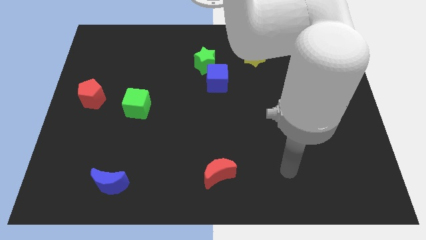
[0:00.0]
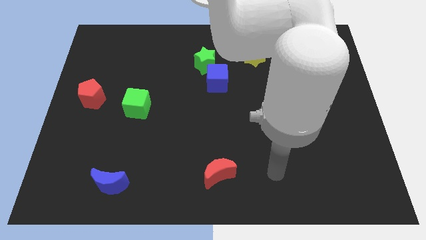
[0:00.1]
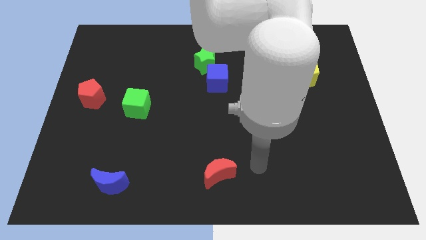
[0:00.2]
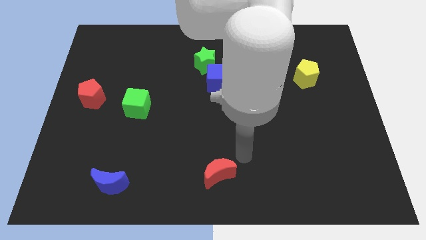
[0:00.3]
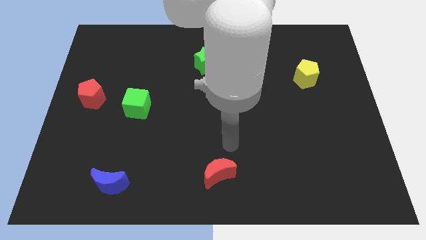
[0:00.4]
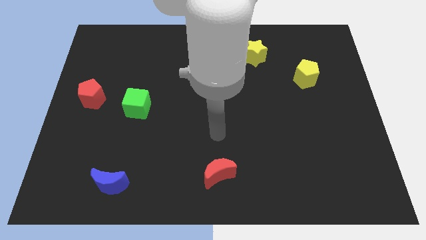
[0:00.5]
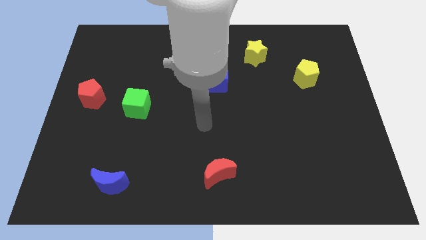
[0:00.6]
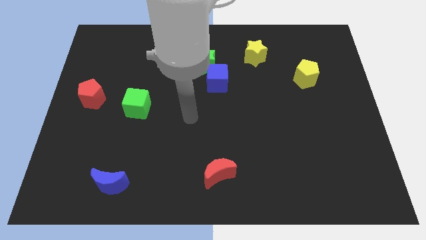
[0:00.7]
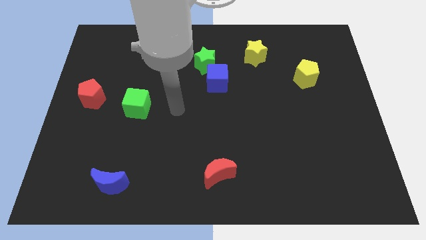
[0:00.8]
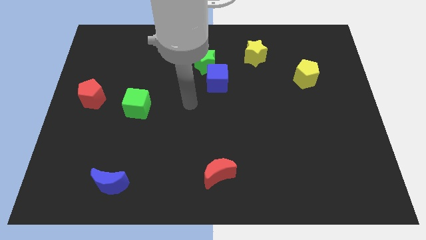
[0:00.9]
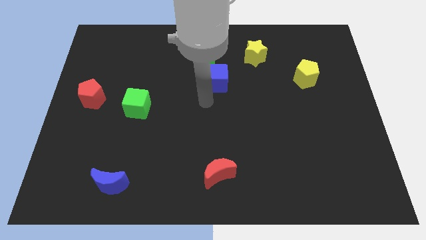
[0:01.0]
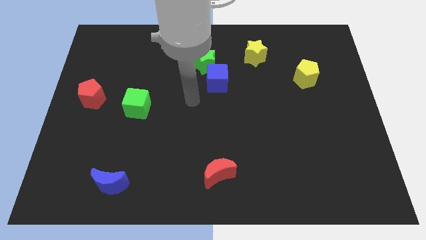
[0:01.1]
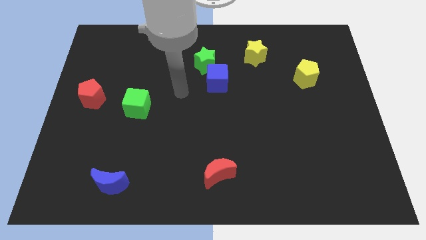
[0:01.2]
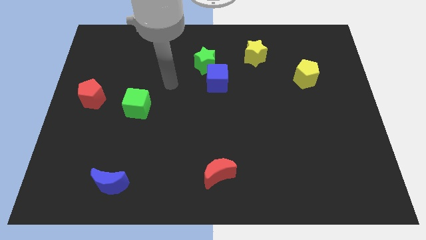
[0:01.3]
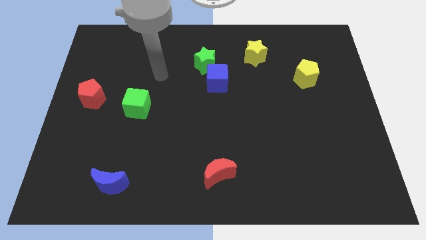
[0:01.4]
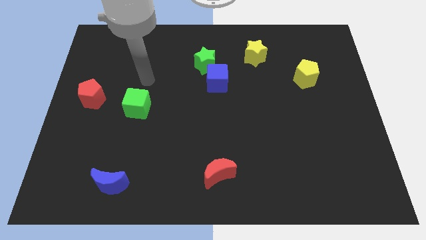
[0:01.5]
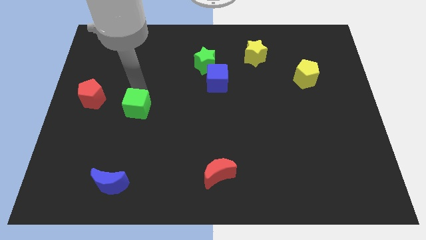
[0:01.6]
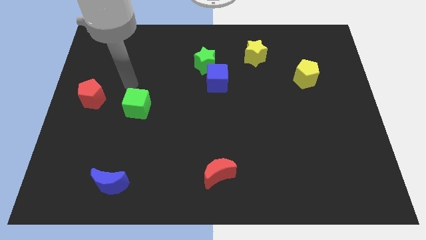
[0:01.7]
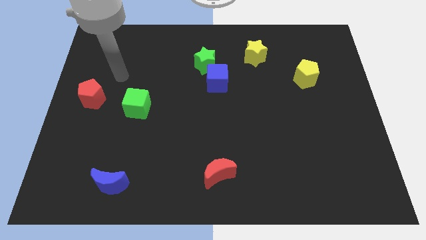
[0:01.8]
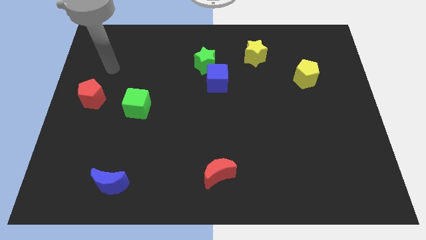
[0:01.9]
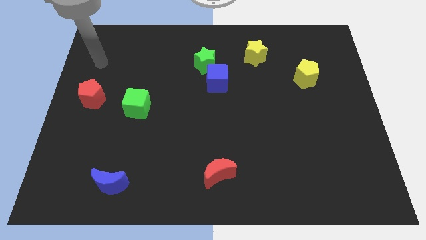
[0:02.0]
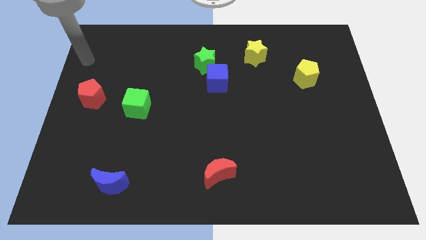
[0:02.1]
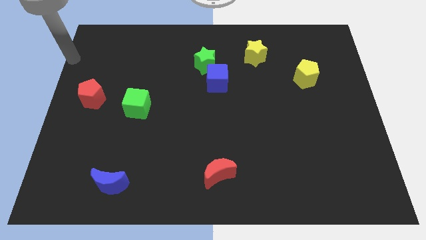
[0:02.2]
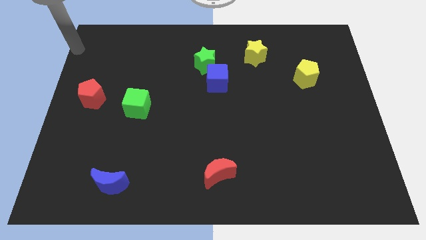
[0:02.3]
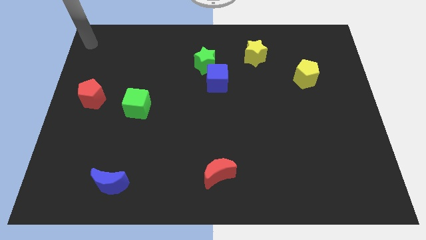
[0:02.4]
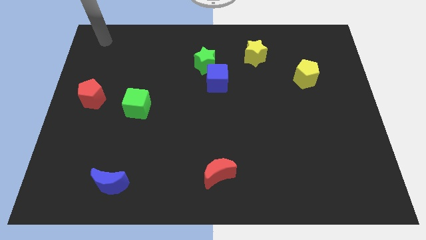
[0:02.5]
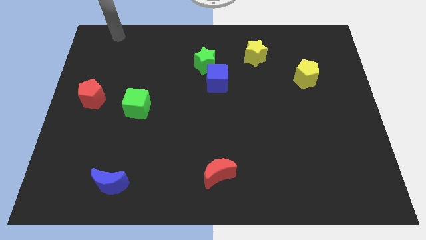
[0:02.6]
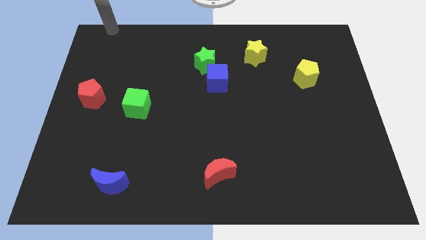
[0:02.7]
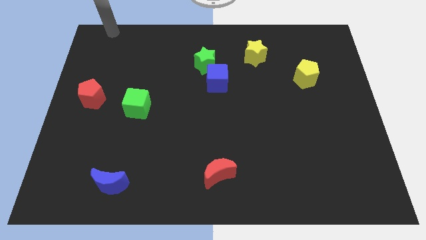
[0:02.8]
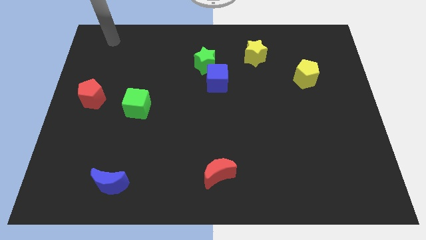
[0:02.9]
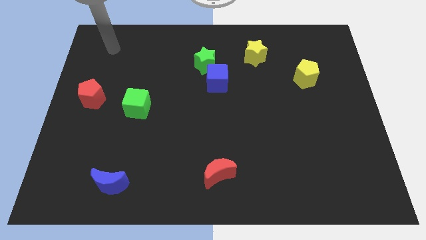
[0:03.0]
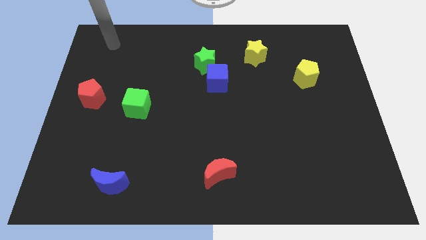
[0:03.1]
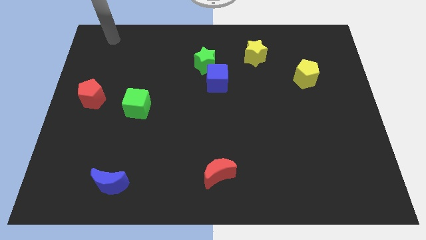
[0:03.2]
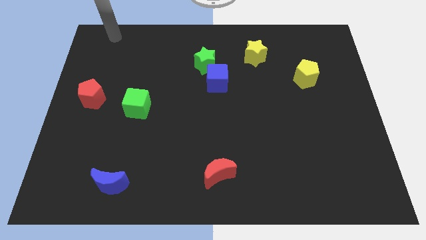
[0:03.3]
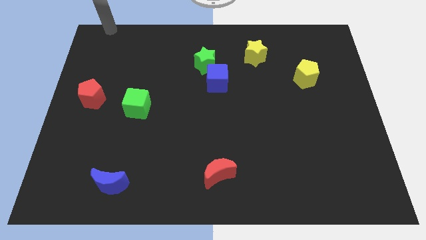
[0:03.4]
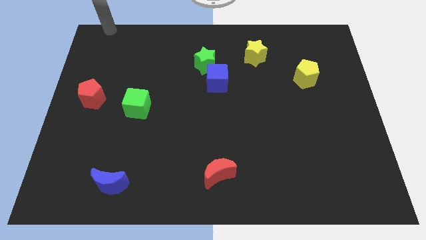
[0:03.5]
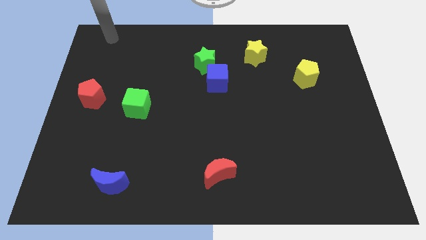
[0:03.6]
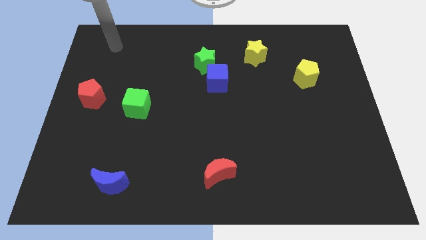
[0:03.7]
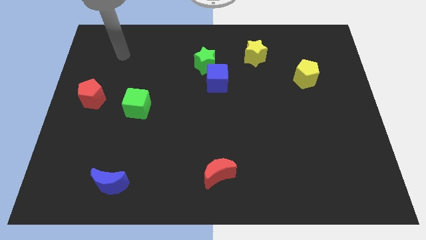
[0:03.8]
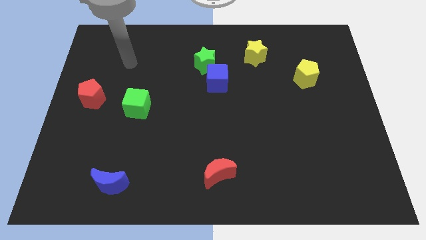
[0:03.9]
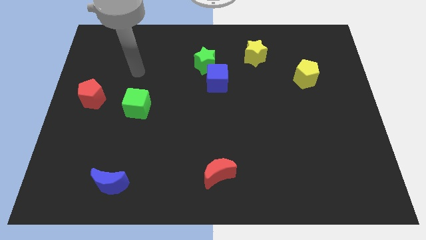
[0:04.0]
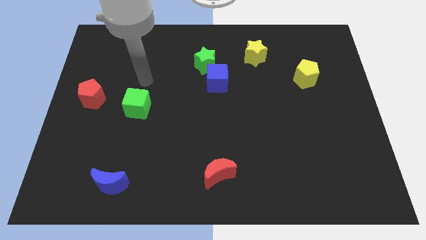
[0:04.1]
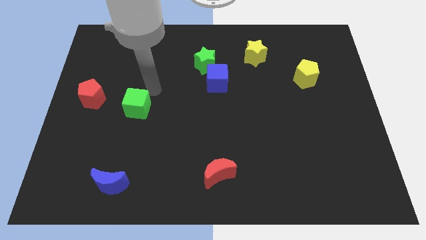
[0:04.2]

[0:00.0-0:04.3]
move your arm close to the green cube

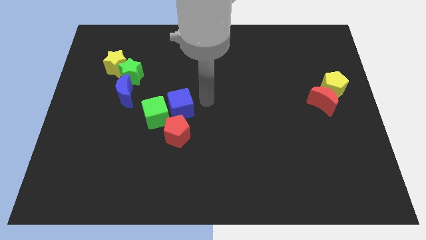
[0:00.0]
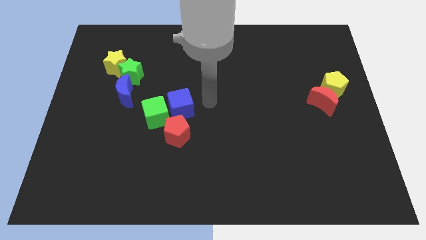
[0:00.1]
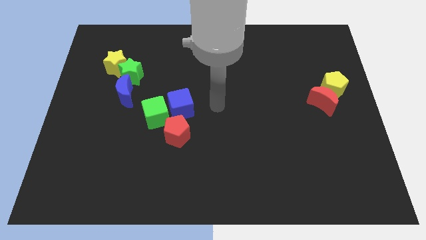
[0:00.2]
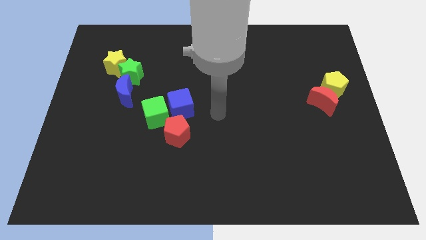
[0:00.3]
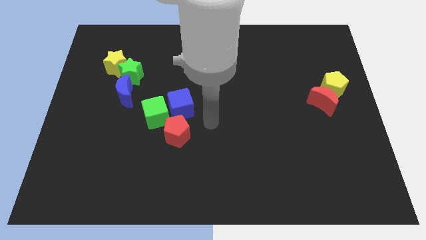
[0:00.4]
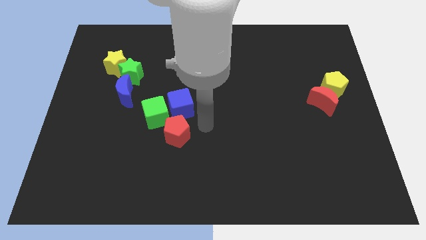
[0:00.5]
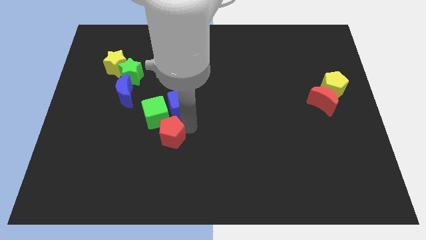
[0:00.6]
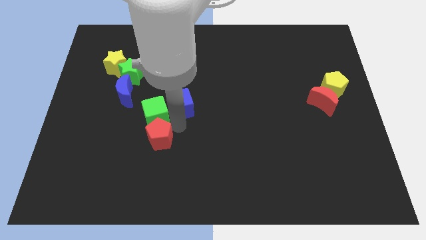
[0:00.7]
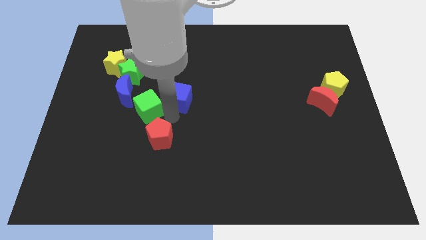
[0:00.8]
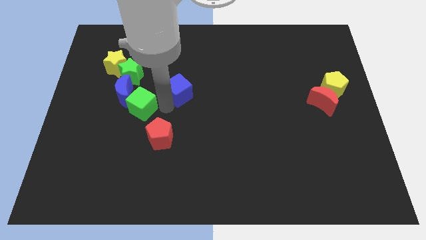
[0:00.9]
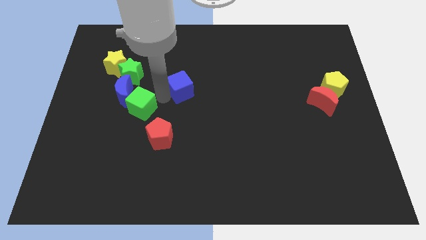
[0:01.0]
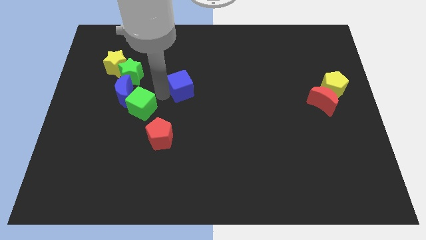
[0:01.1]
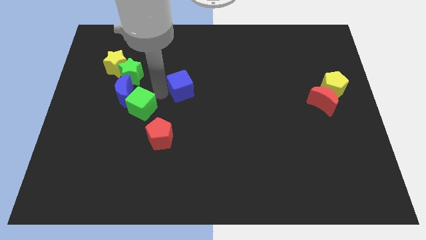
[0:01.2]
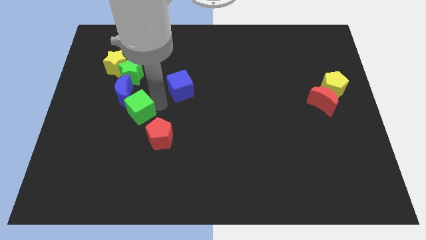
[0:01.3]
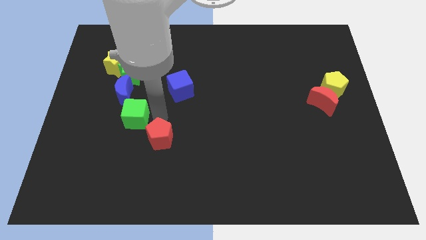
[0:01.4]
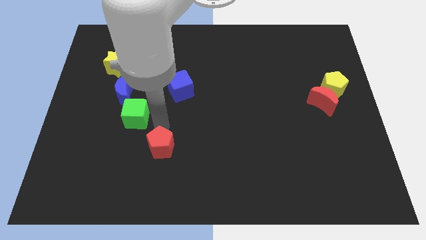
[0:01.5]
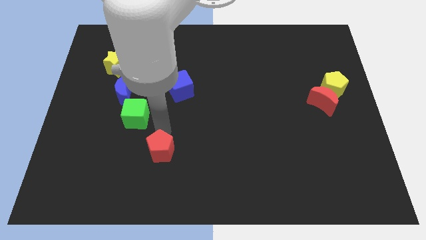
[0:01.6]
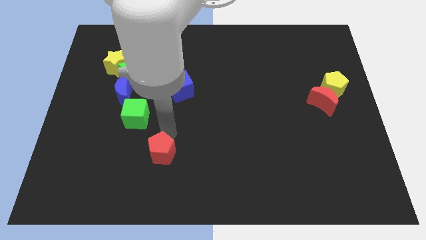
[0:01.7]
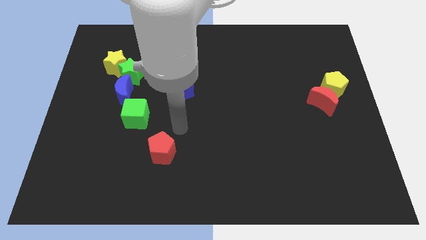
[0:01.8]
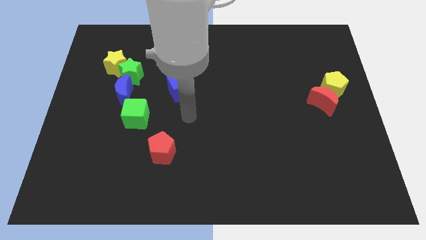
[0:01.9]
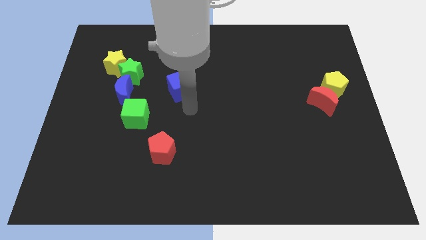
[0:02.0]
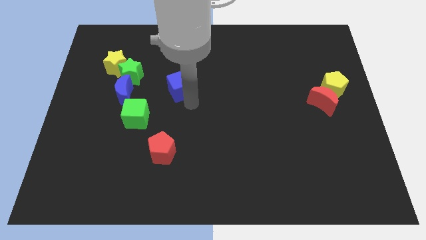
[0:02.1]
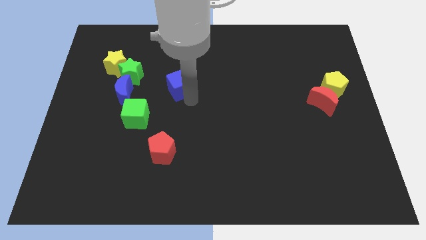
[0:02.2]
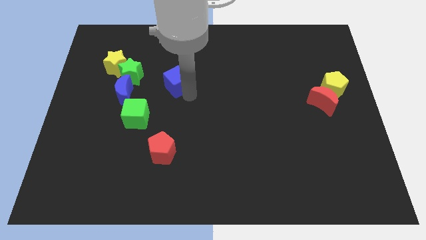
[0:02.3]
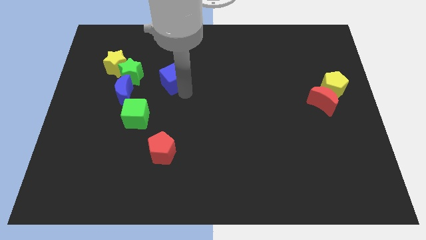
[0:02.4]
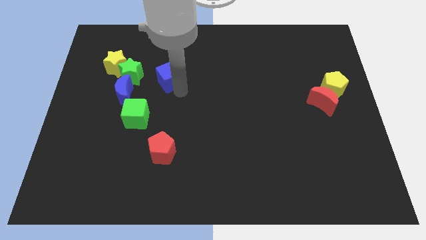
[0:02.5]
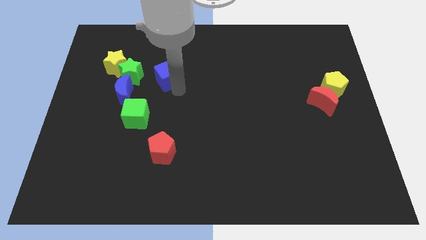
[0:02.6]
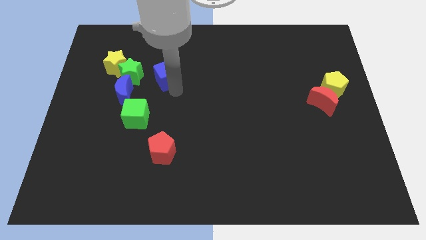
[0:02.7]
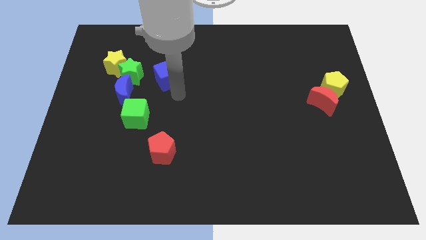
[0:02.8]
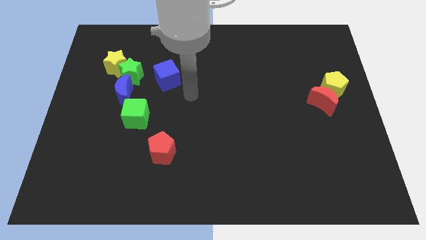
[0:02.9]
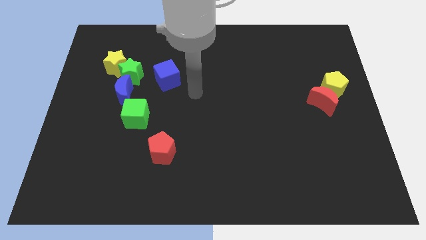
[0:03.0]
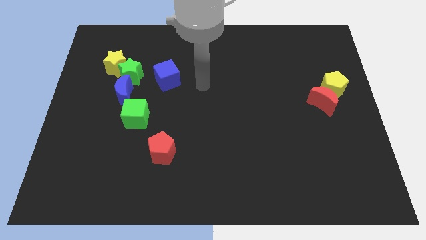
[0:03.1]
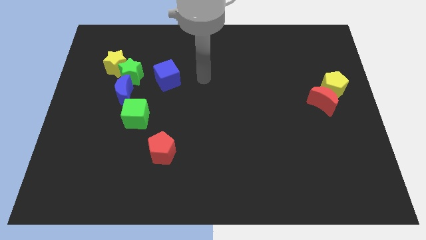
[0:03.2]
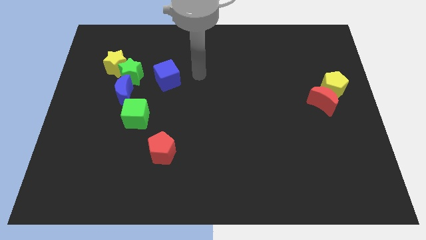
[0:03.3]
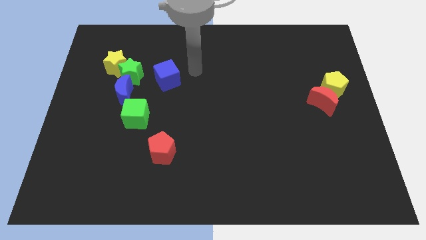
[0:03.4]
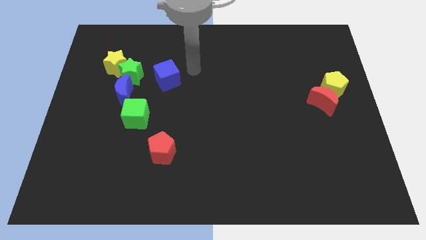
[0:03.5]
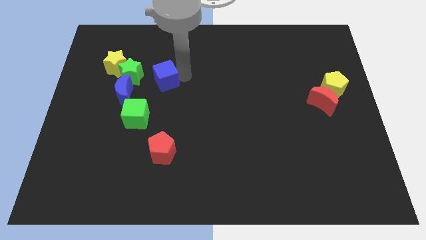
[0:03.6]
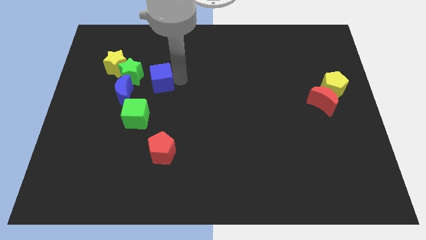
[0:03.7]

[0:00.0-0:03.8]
separate green cube blue cube and red pentagon at a time

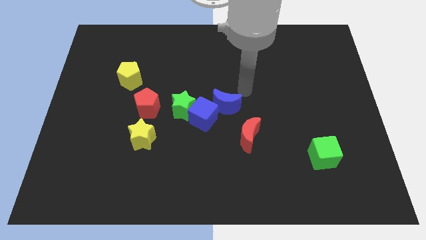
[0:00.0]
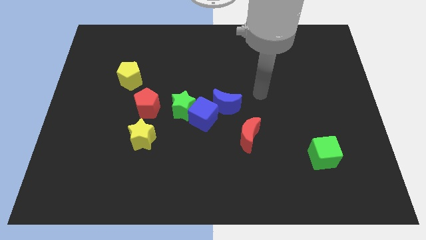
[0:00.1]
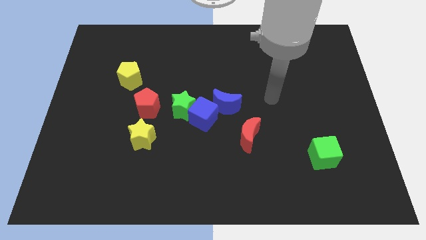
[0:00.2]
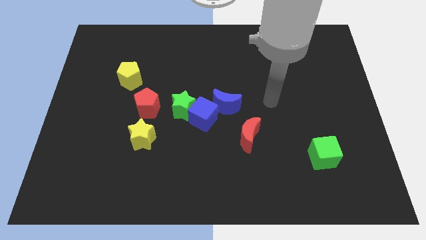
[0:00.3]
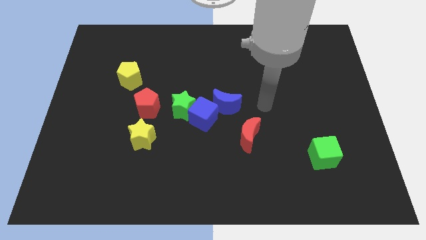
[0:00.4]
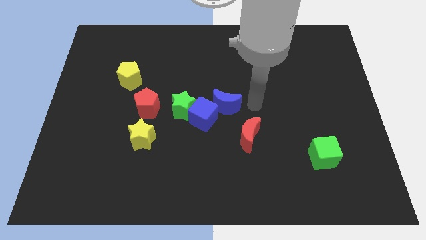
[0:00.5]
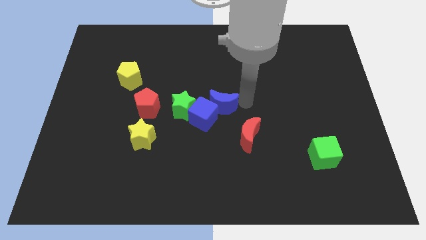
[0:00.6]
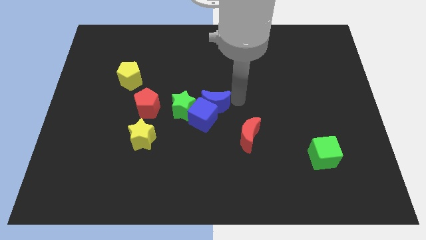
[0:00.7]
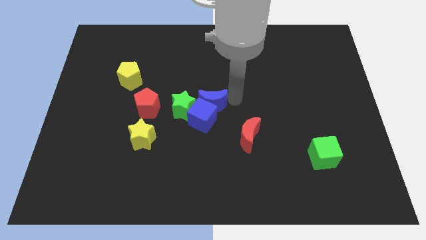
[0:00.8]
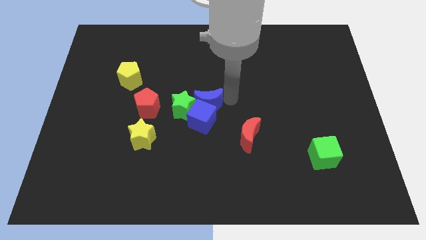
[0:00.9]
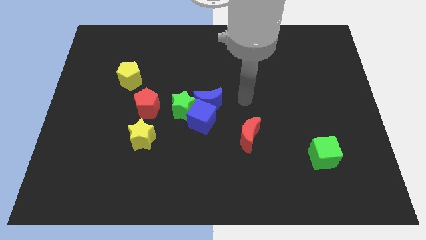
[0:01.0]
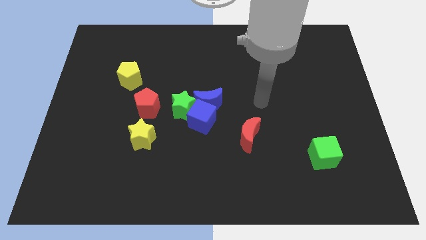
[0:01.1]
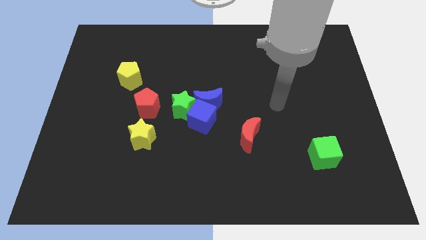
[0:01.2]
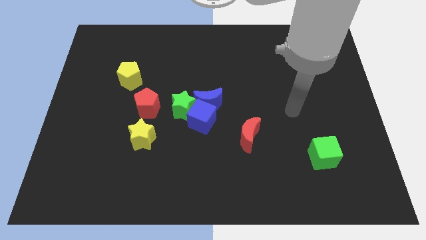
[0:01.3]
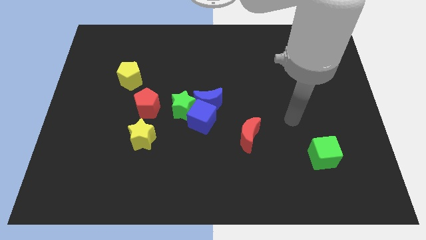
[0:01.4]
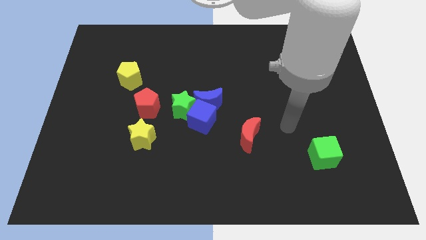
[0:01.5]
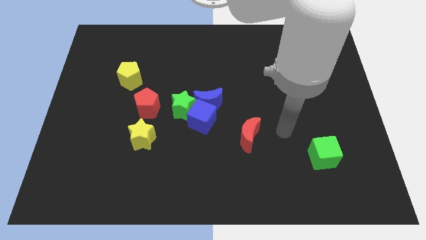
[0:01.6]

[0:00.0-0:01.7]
push blue crescent into the blue cube
